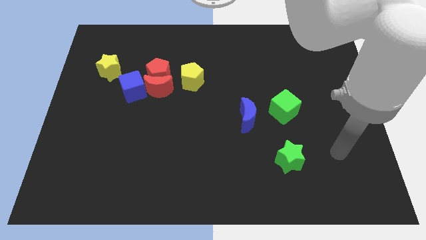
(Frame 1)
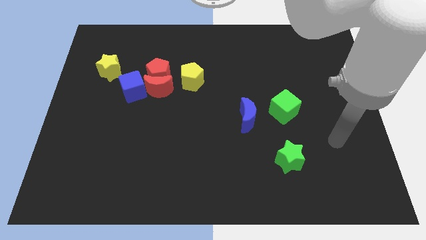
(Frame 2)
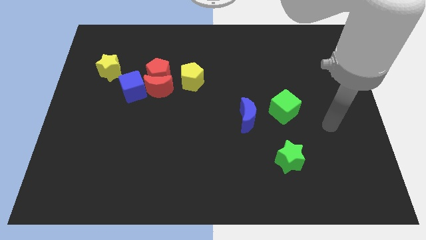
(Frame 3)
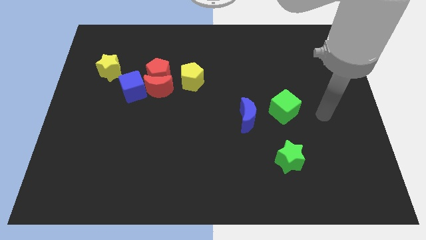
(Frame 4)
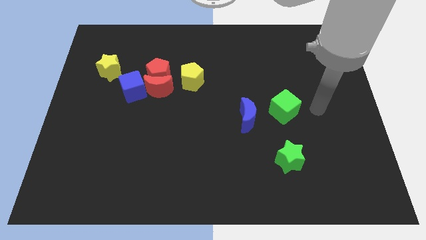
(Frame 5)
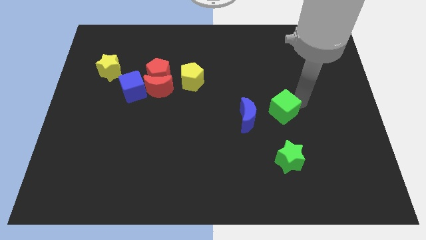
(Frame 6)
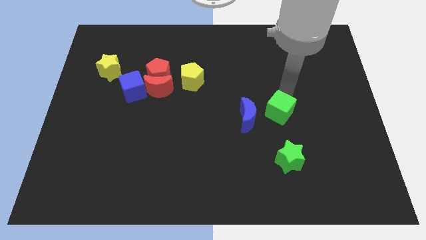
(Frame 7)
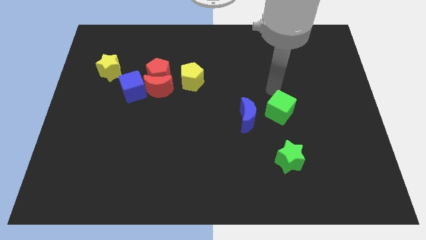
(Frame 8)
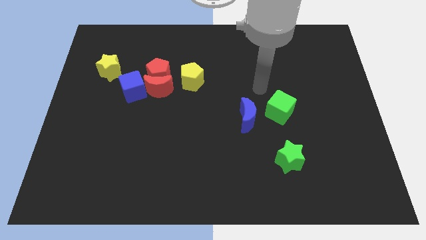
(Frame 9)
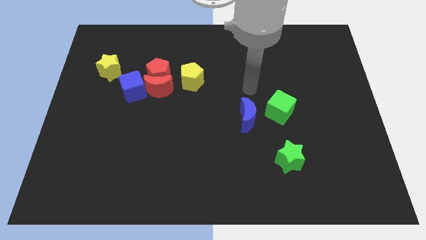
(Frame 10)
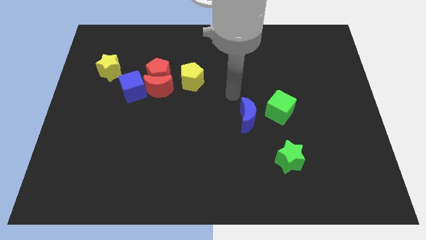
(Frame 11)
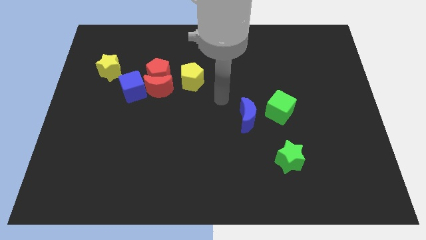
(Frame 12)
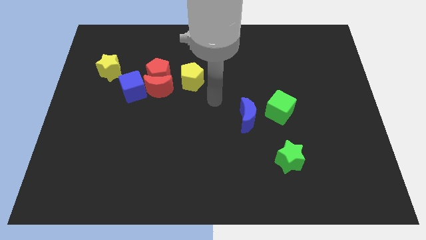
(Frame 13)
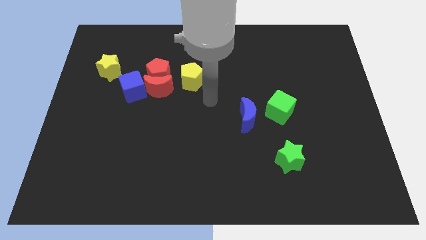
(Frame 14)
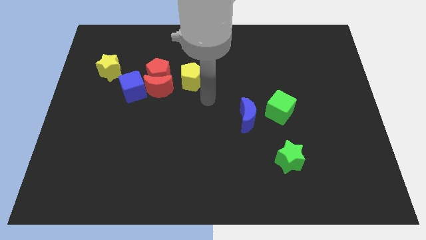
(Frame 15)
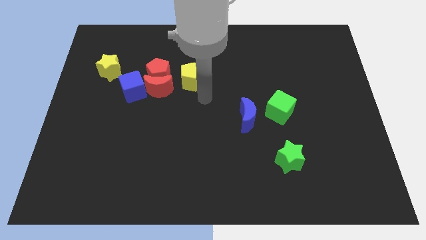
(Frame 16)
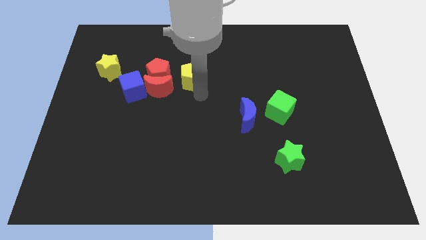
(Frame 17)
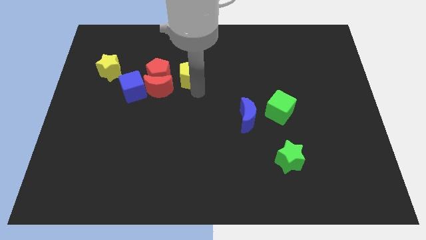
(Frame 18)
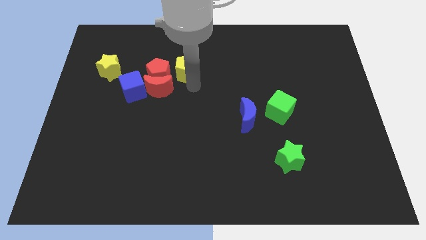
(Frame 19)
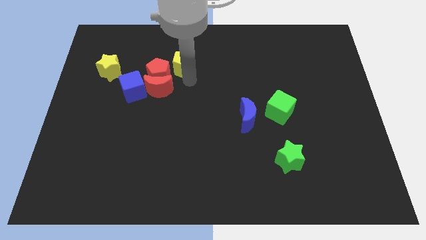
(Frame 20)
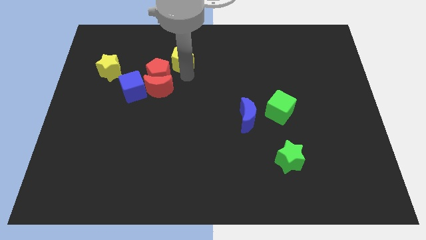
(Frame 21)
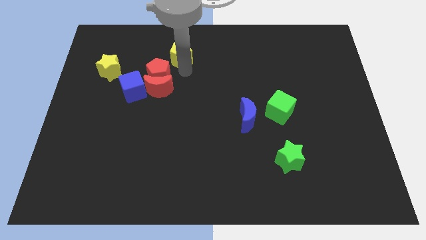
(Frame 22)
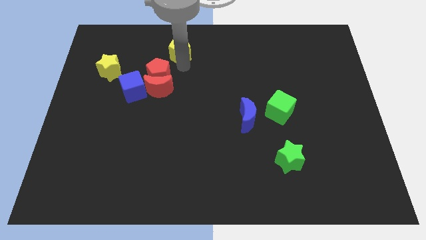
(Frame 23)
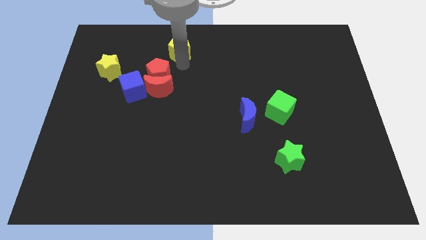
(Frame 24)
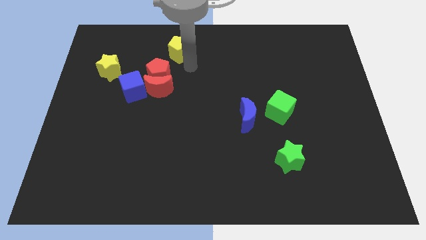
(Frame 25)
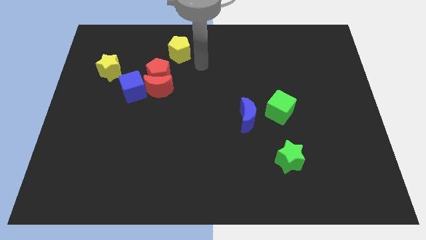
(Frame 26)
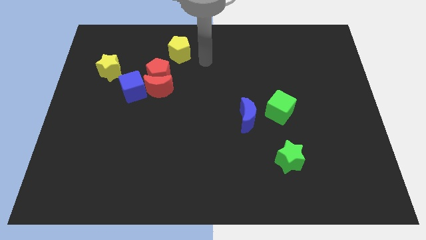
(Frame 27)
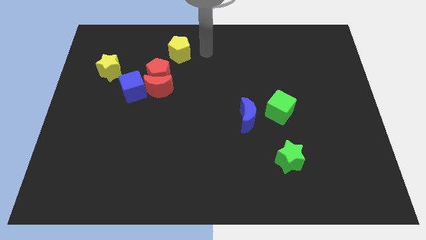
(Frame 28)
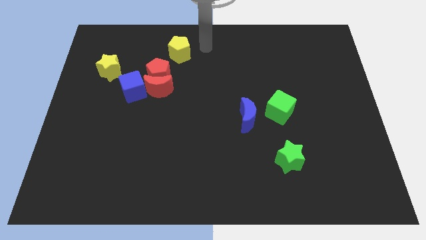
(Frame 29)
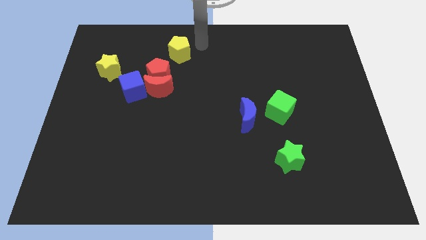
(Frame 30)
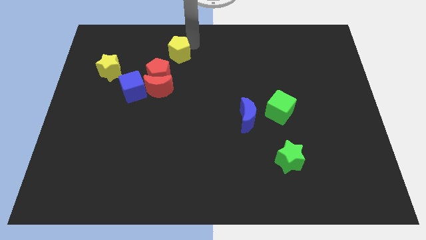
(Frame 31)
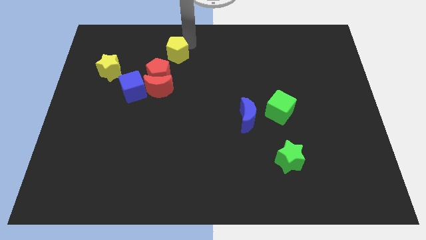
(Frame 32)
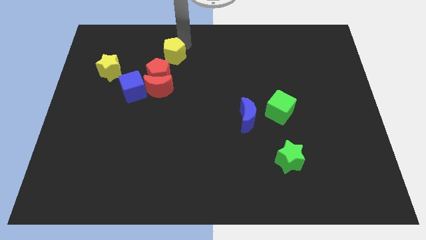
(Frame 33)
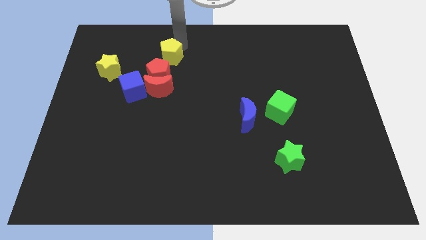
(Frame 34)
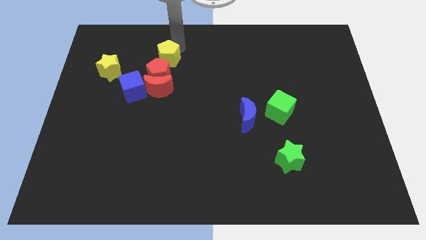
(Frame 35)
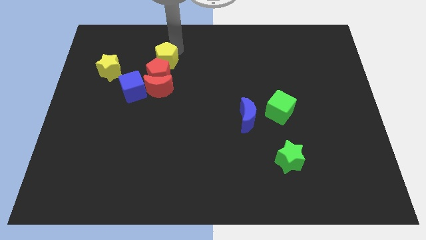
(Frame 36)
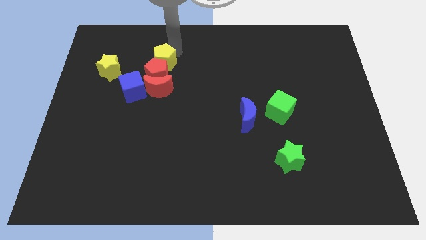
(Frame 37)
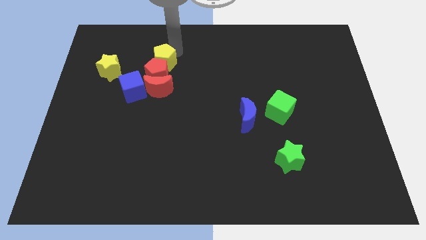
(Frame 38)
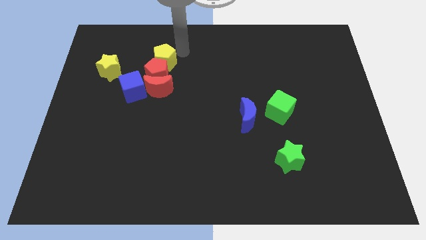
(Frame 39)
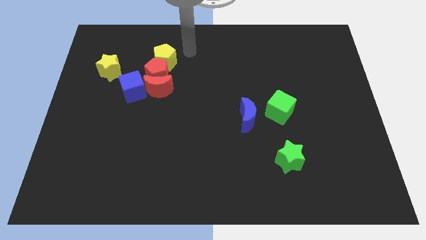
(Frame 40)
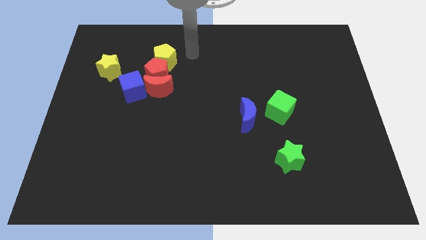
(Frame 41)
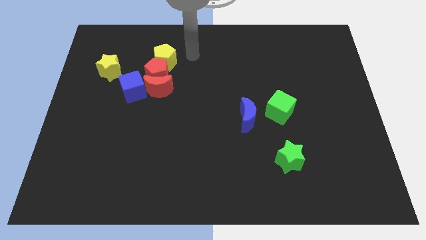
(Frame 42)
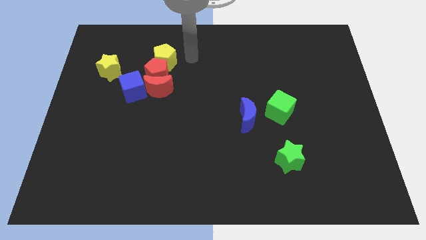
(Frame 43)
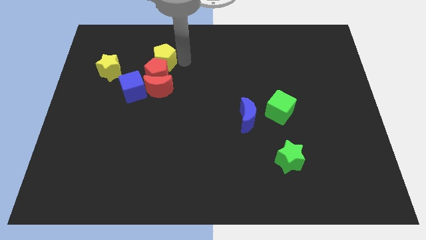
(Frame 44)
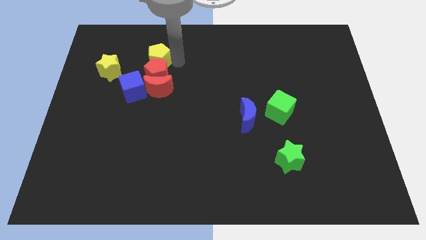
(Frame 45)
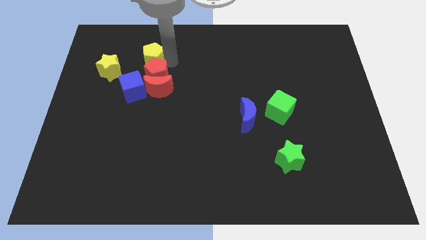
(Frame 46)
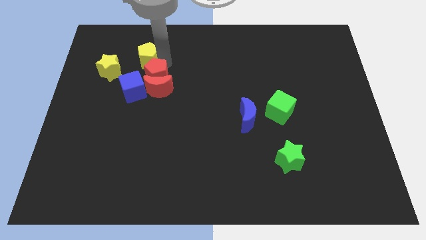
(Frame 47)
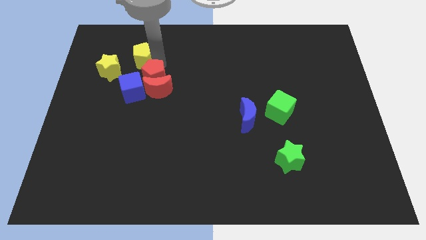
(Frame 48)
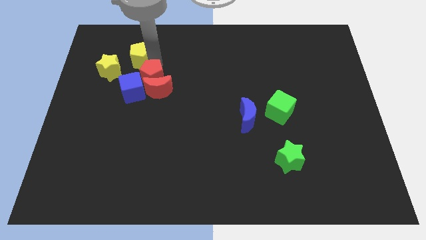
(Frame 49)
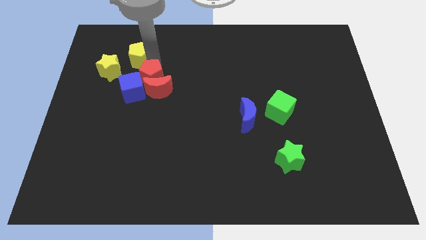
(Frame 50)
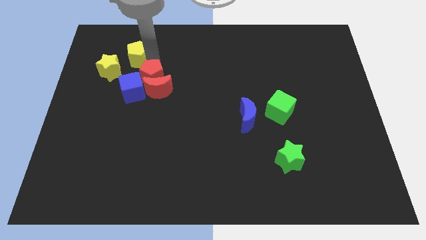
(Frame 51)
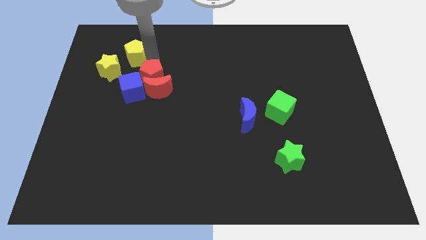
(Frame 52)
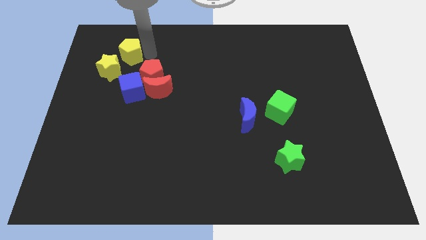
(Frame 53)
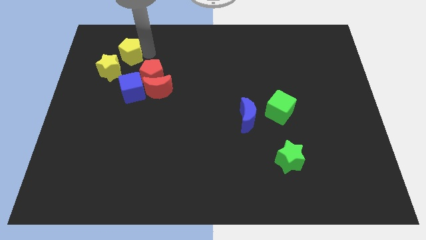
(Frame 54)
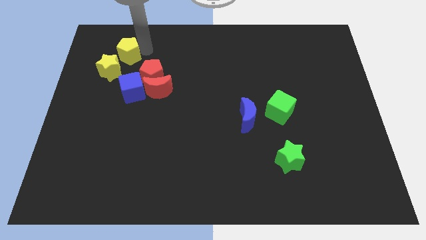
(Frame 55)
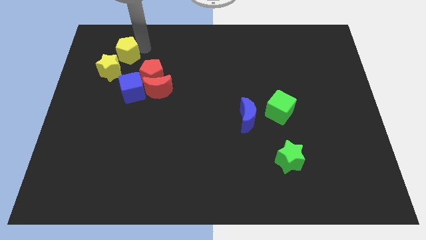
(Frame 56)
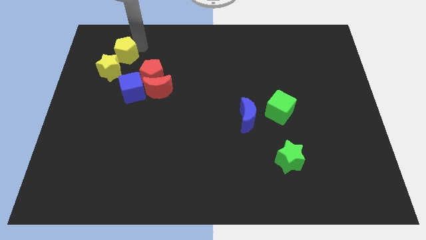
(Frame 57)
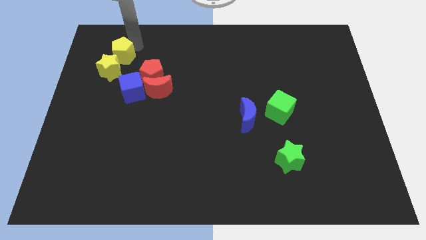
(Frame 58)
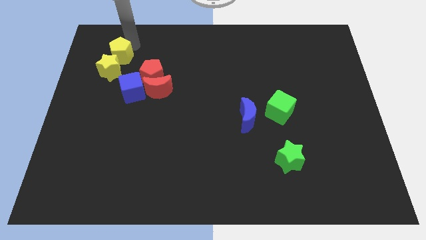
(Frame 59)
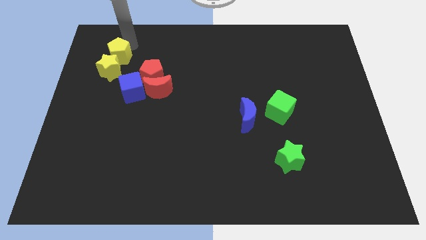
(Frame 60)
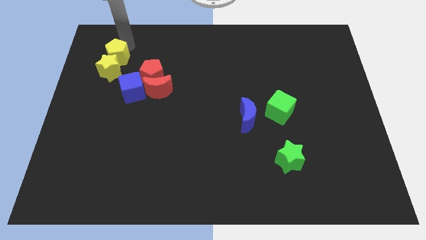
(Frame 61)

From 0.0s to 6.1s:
slide the yellow pentagon to the yellow star

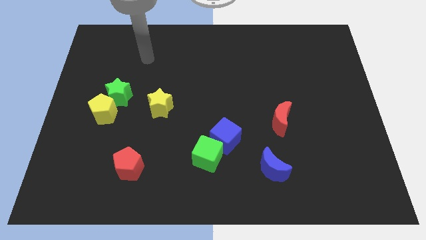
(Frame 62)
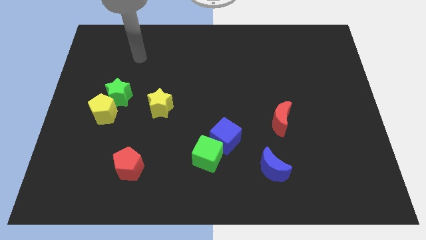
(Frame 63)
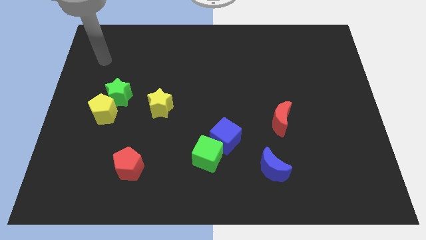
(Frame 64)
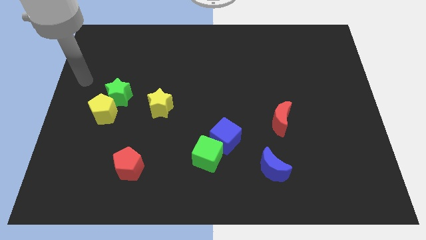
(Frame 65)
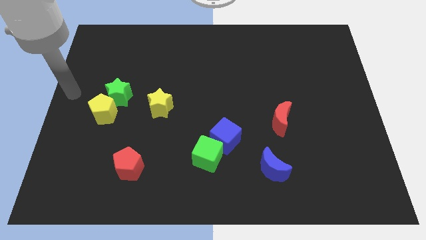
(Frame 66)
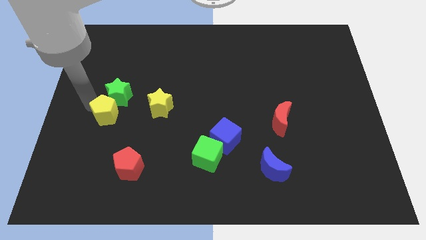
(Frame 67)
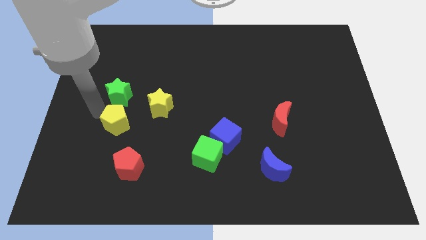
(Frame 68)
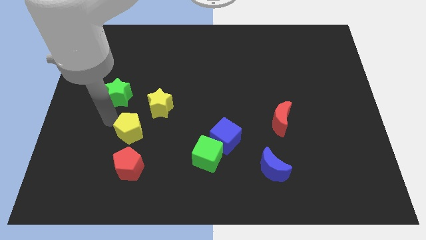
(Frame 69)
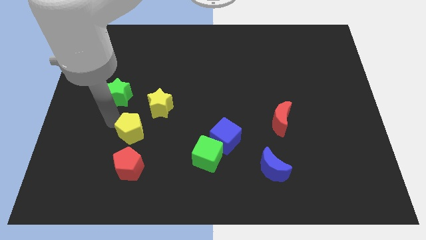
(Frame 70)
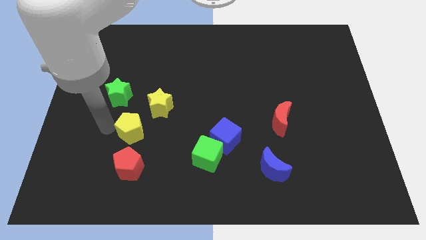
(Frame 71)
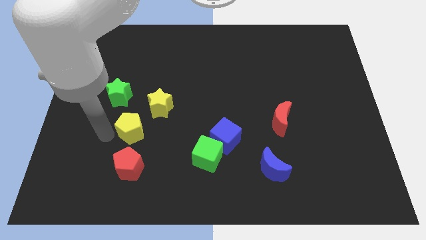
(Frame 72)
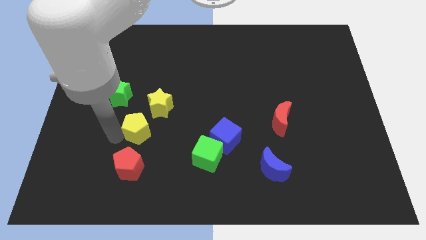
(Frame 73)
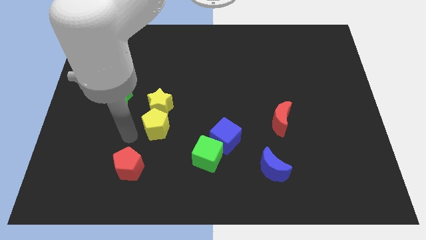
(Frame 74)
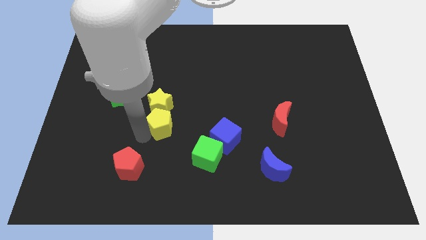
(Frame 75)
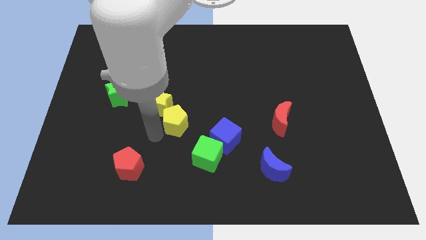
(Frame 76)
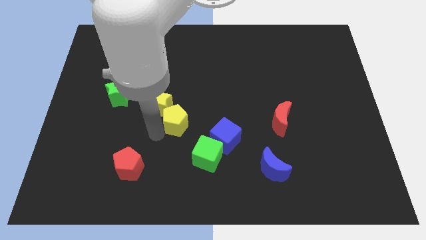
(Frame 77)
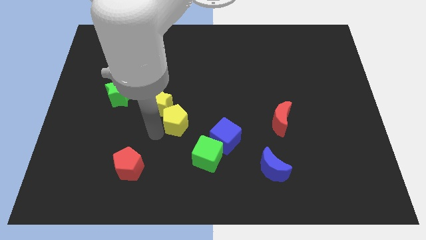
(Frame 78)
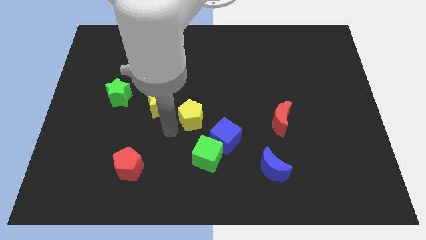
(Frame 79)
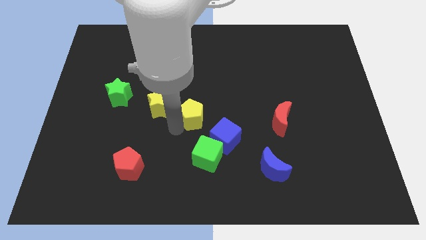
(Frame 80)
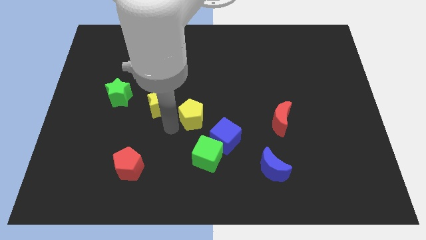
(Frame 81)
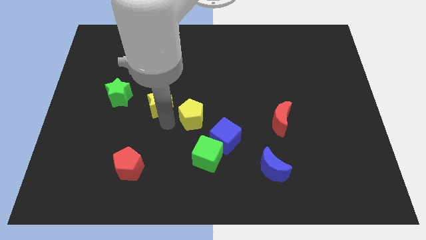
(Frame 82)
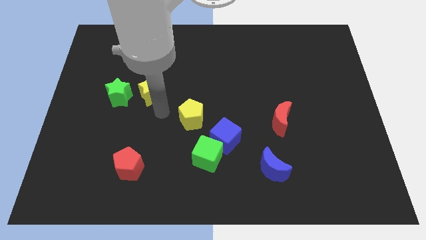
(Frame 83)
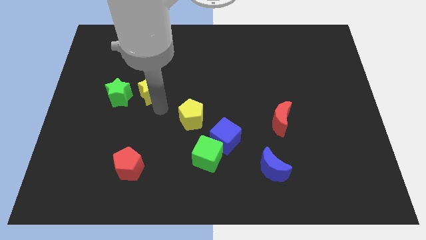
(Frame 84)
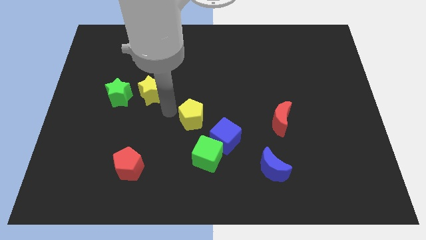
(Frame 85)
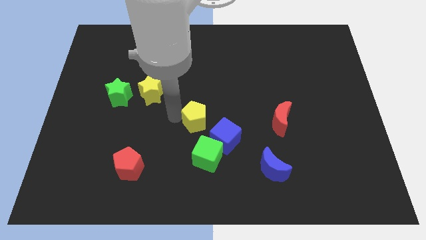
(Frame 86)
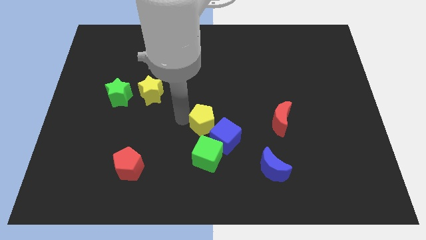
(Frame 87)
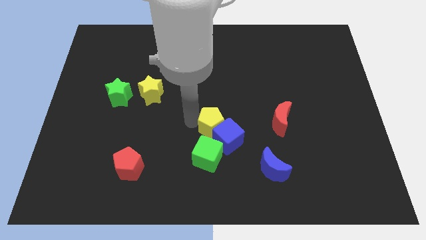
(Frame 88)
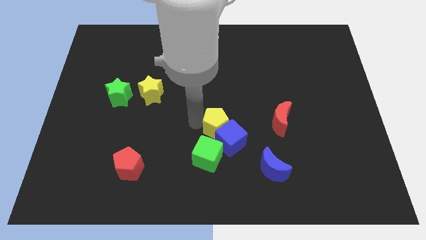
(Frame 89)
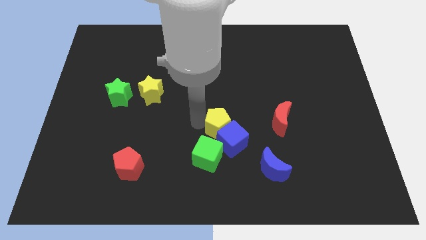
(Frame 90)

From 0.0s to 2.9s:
put the yellow pentagon next to the blue cube
